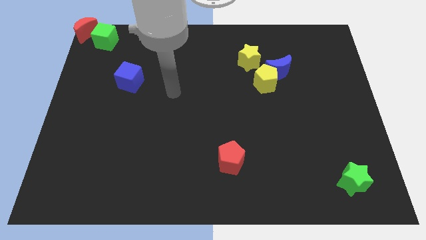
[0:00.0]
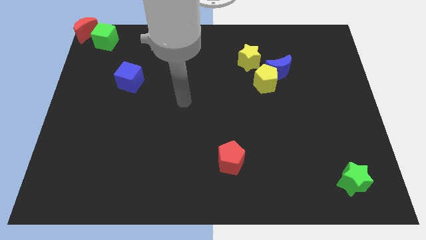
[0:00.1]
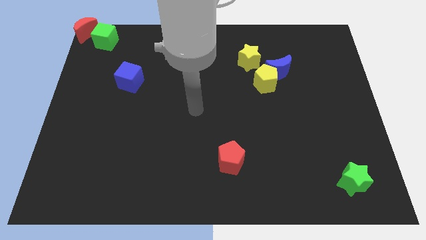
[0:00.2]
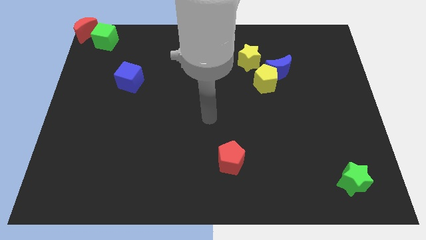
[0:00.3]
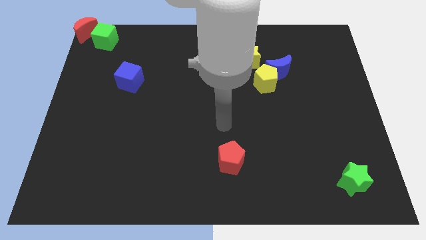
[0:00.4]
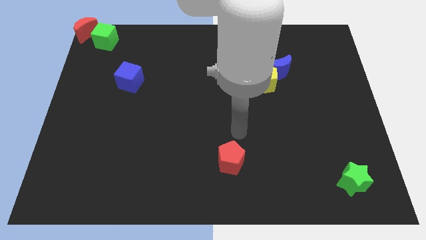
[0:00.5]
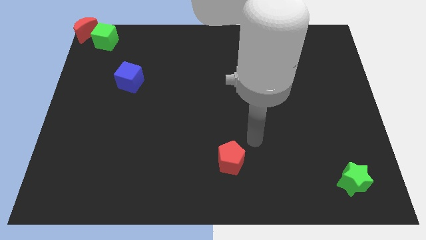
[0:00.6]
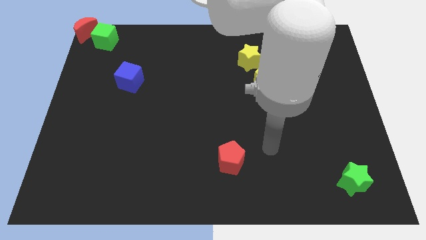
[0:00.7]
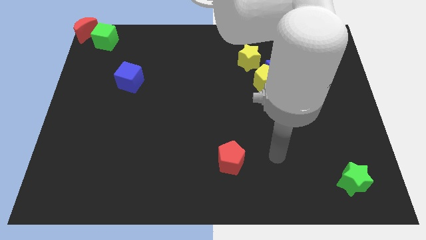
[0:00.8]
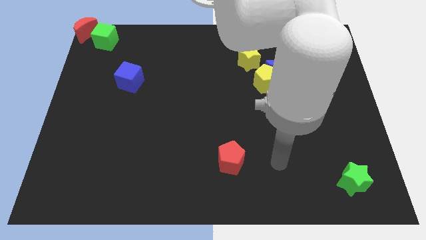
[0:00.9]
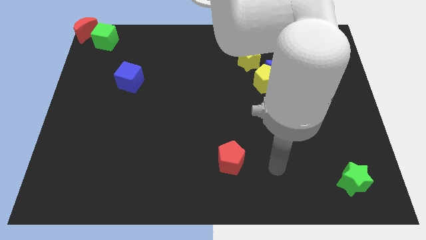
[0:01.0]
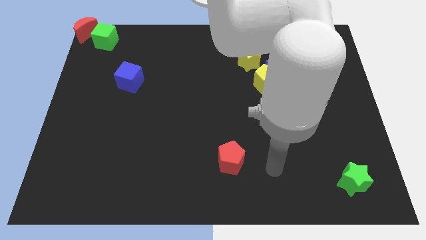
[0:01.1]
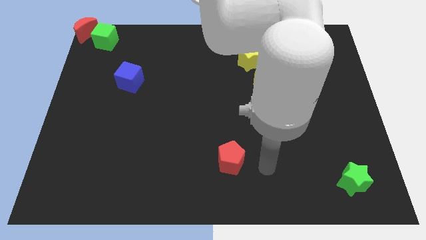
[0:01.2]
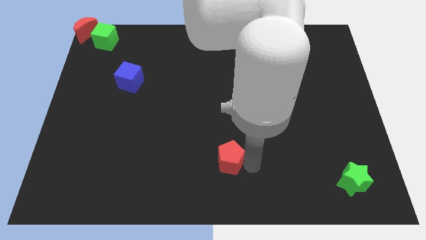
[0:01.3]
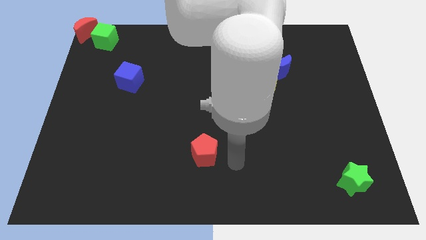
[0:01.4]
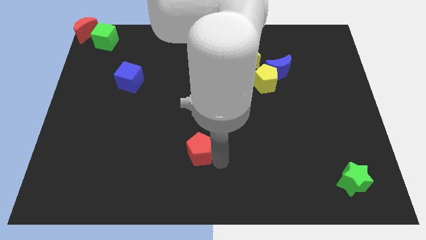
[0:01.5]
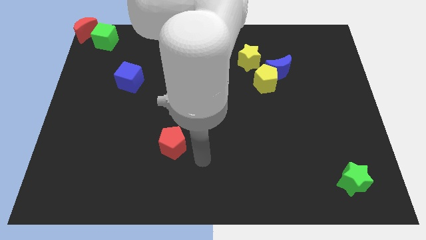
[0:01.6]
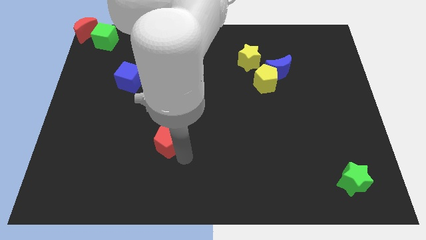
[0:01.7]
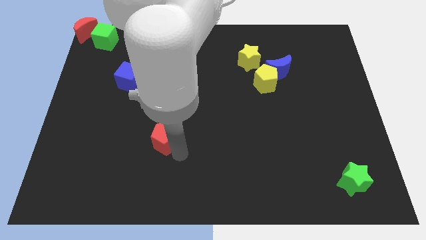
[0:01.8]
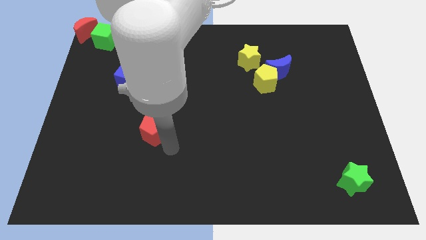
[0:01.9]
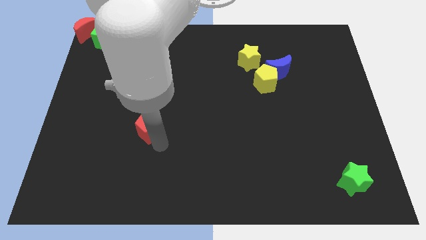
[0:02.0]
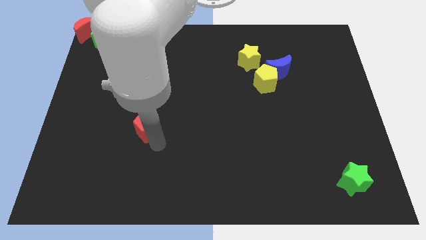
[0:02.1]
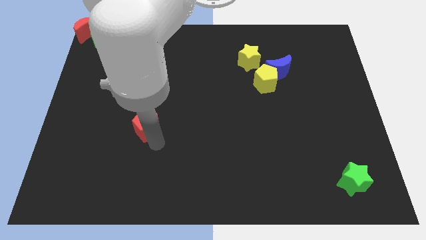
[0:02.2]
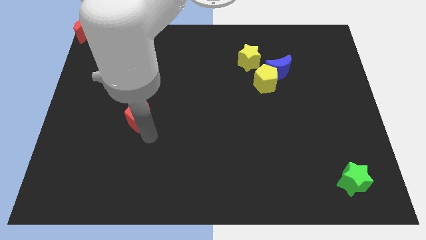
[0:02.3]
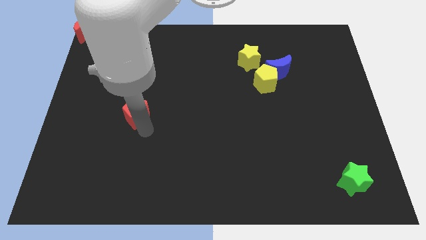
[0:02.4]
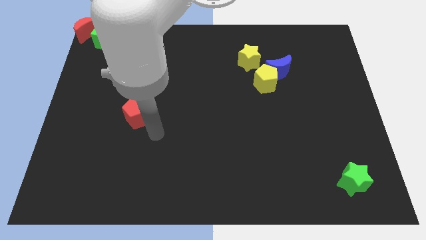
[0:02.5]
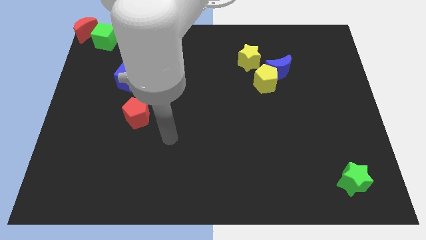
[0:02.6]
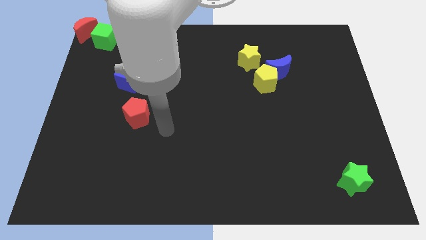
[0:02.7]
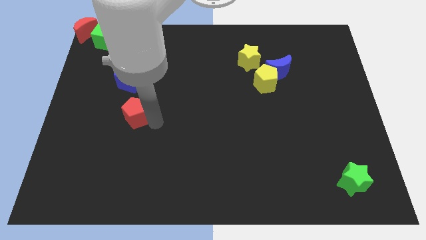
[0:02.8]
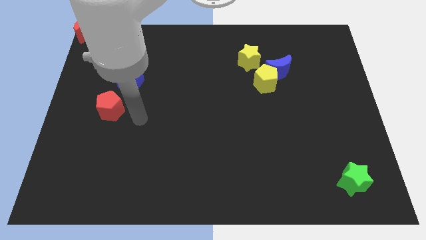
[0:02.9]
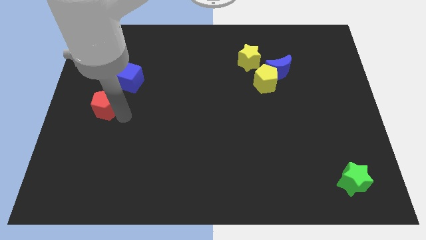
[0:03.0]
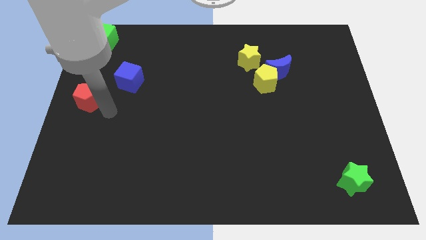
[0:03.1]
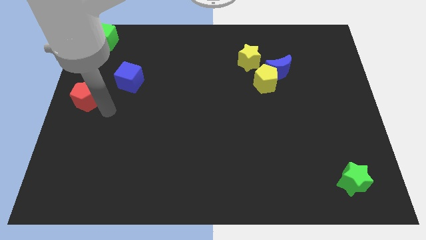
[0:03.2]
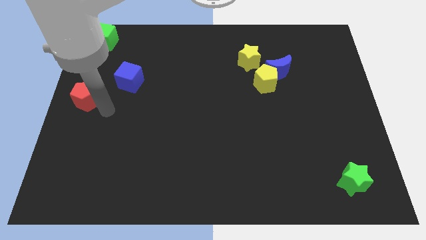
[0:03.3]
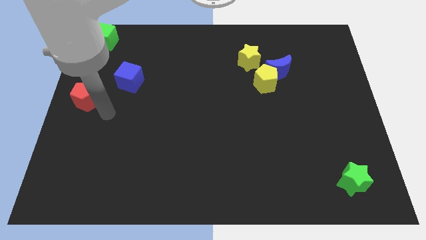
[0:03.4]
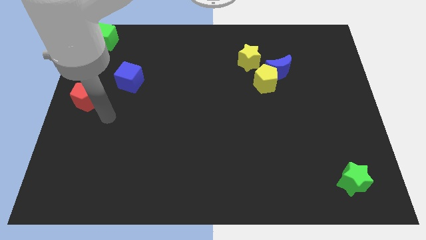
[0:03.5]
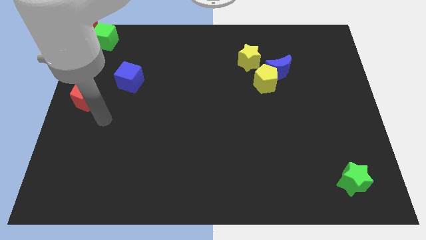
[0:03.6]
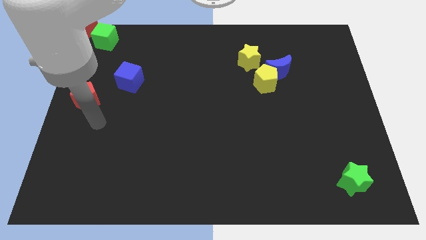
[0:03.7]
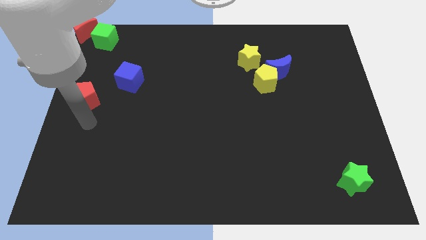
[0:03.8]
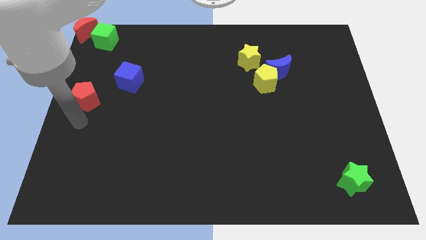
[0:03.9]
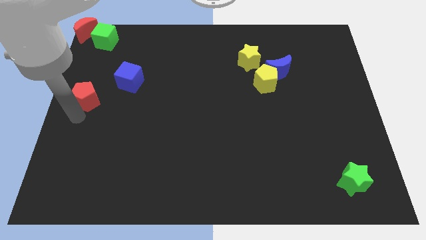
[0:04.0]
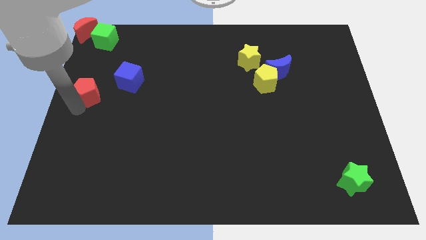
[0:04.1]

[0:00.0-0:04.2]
place the red pentagon left to the blue cube

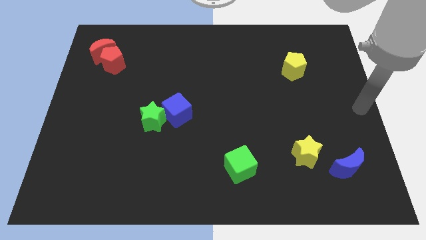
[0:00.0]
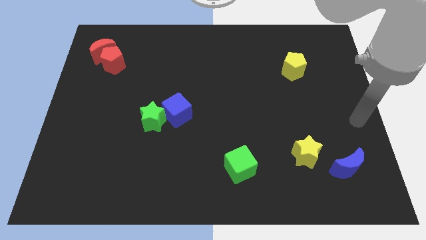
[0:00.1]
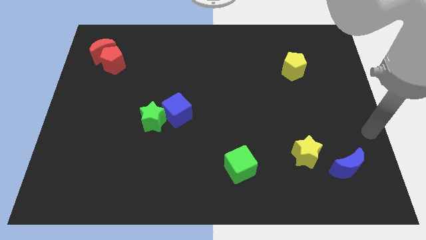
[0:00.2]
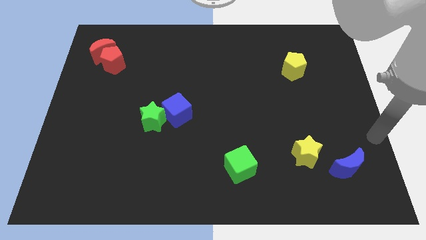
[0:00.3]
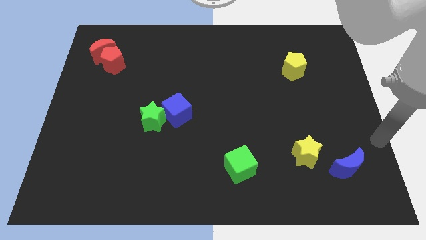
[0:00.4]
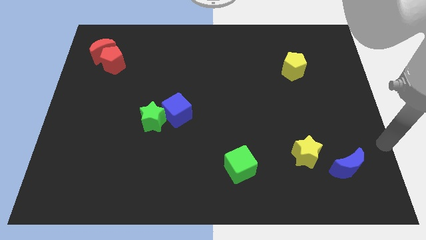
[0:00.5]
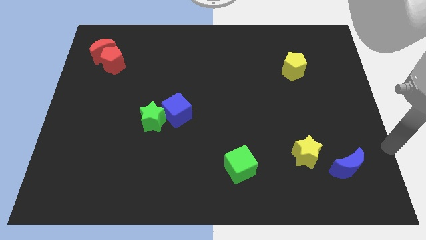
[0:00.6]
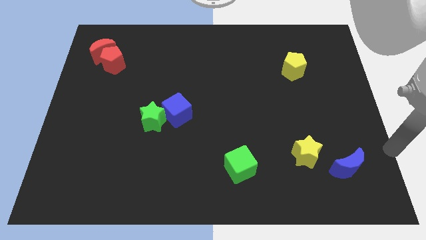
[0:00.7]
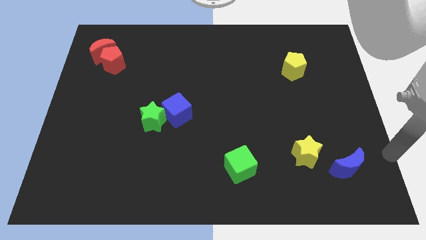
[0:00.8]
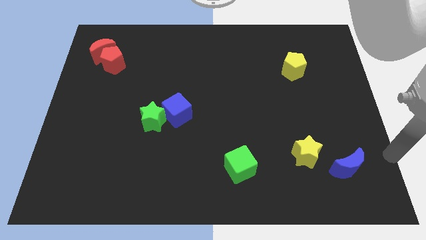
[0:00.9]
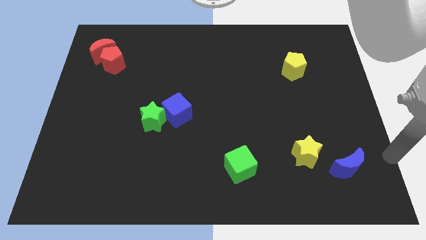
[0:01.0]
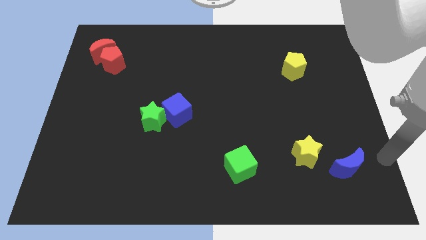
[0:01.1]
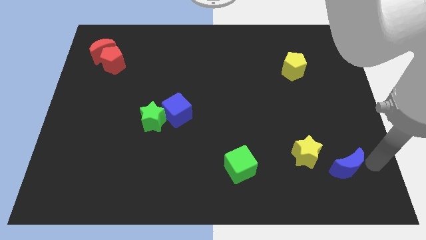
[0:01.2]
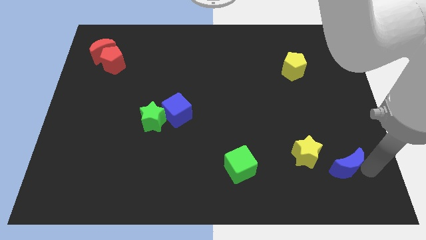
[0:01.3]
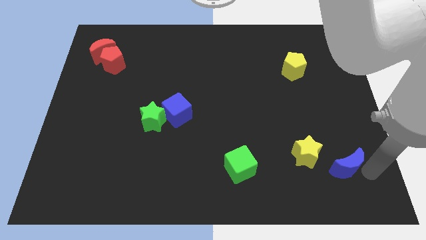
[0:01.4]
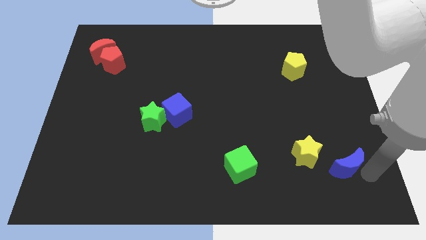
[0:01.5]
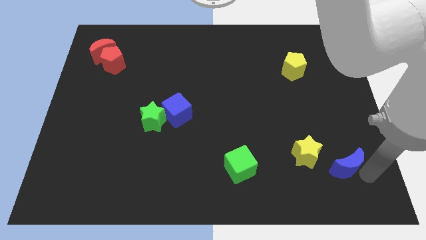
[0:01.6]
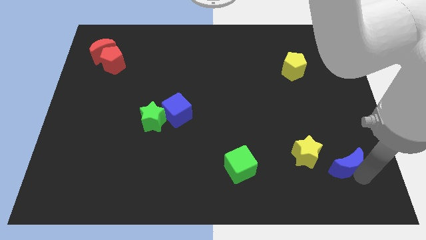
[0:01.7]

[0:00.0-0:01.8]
slightly touch your arm to the blue moon

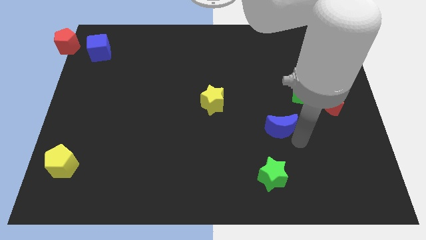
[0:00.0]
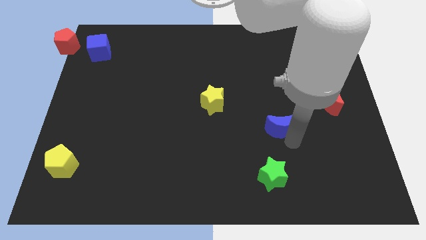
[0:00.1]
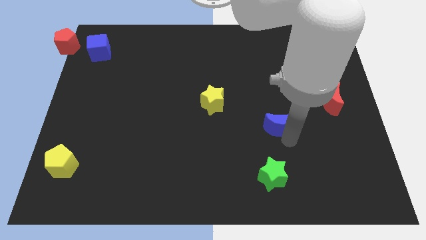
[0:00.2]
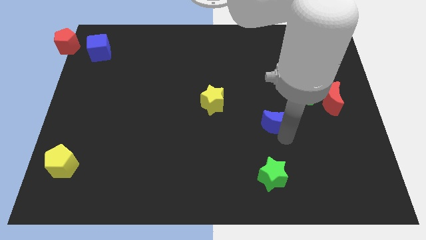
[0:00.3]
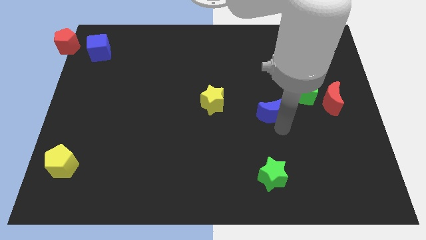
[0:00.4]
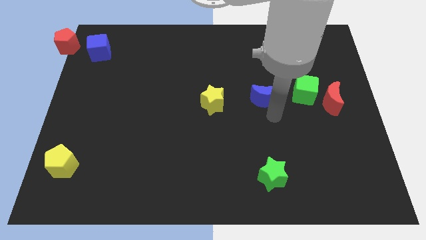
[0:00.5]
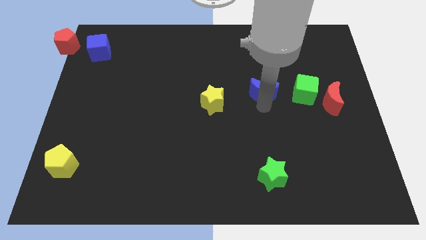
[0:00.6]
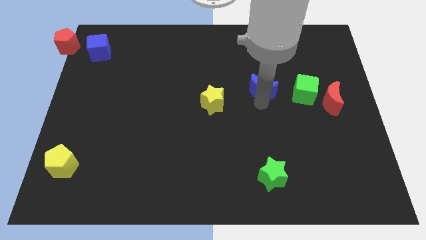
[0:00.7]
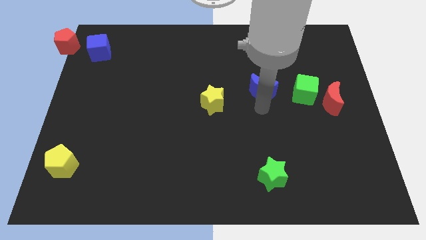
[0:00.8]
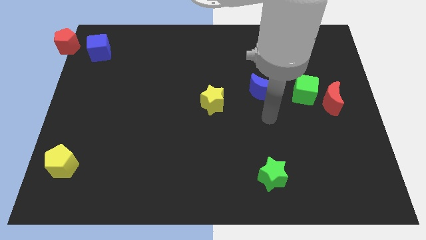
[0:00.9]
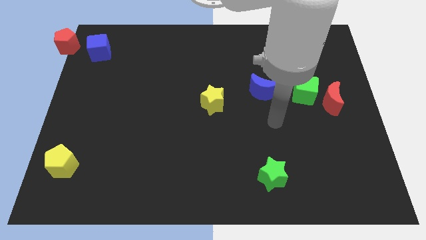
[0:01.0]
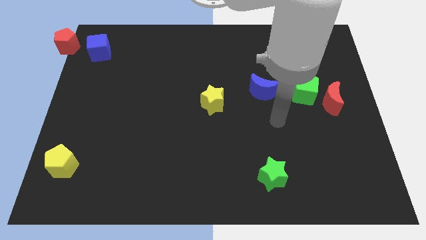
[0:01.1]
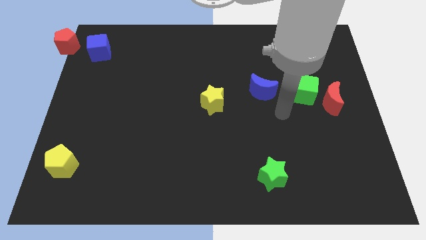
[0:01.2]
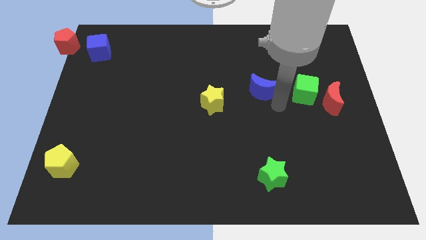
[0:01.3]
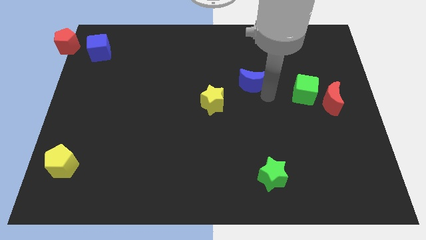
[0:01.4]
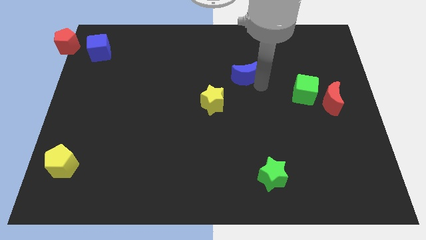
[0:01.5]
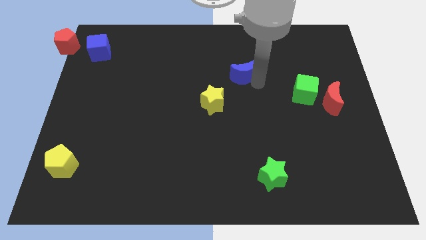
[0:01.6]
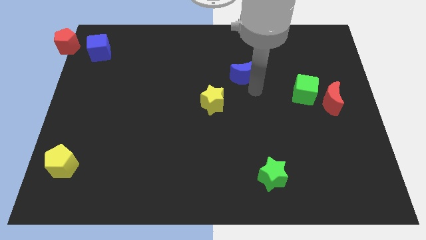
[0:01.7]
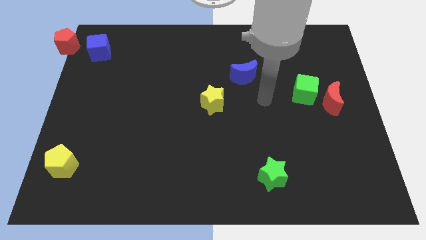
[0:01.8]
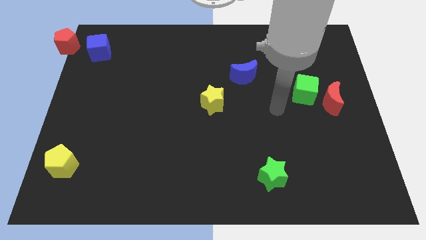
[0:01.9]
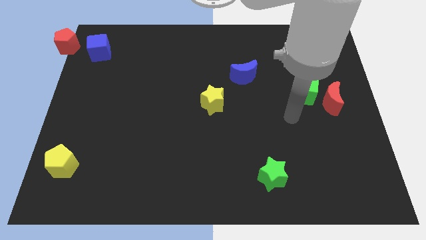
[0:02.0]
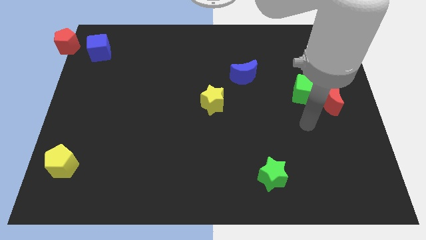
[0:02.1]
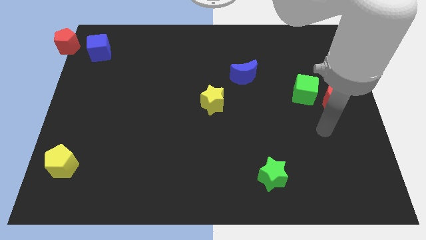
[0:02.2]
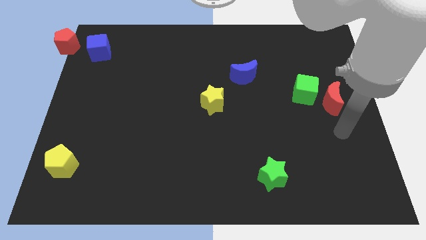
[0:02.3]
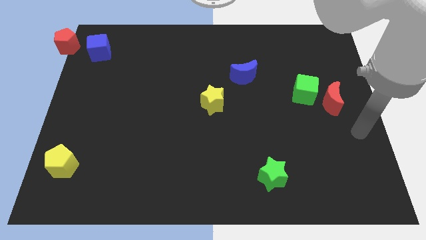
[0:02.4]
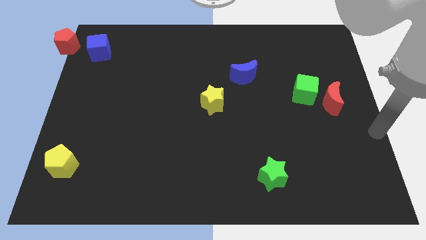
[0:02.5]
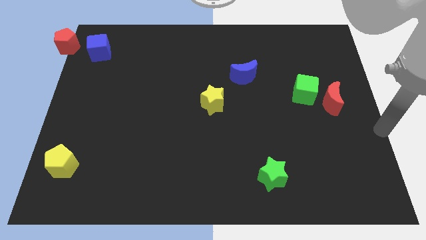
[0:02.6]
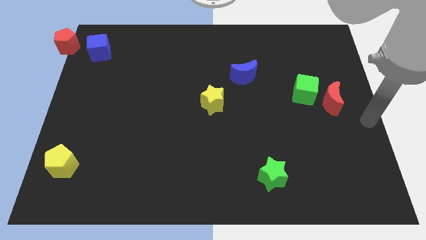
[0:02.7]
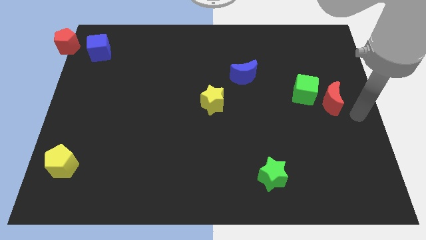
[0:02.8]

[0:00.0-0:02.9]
push the blue moon to the top center
